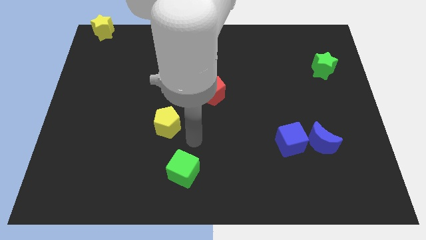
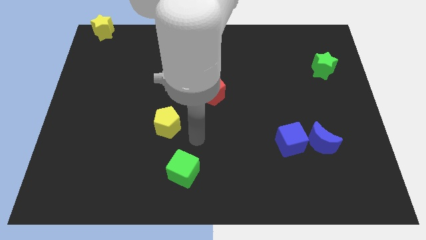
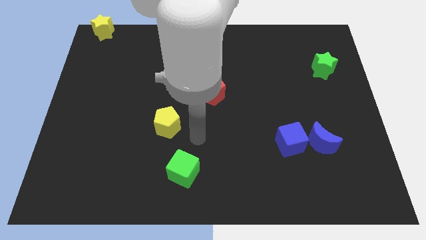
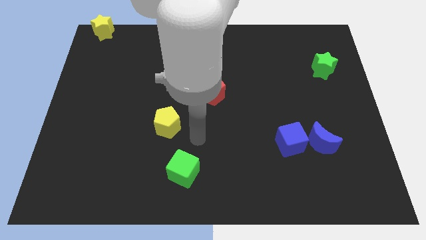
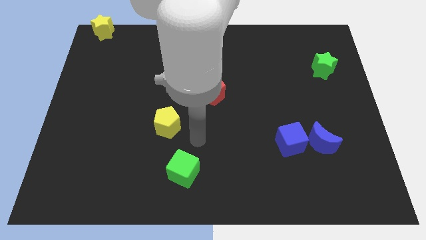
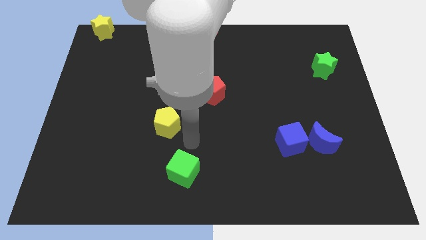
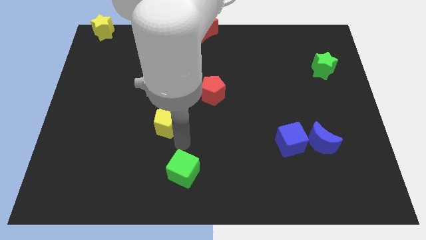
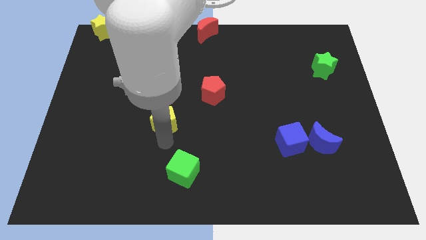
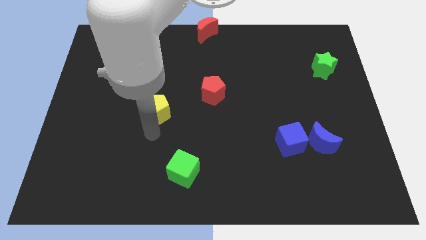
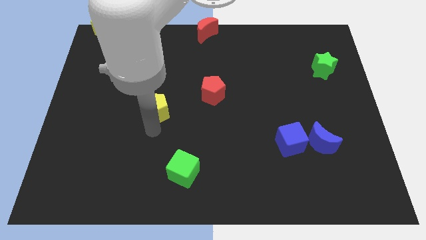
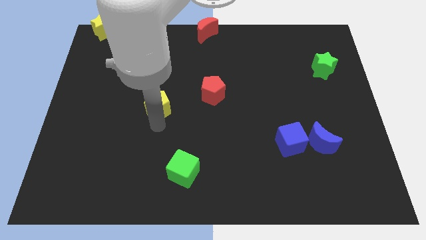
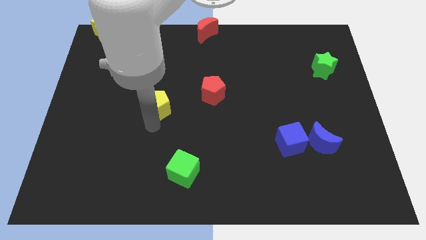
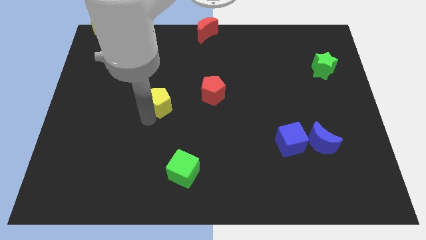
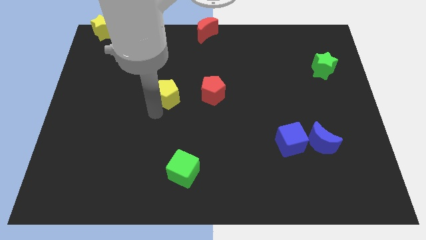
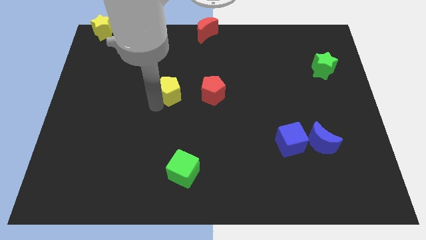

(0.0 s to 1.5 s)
move the yellow pentagon to the left of red pentagon

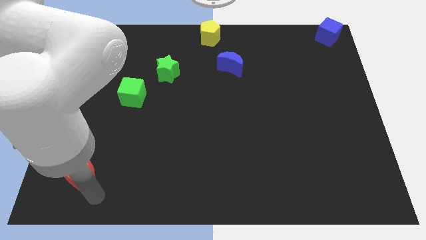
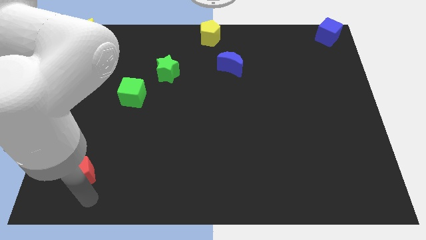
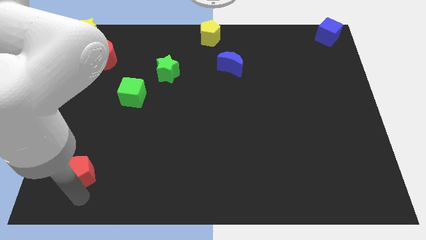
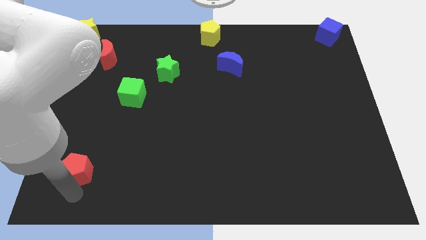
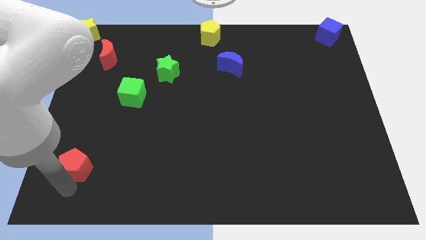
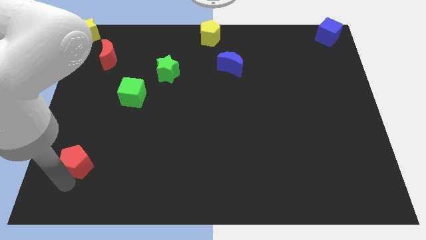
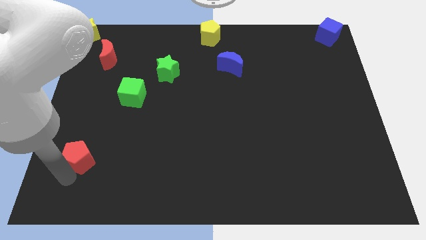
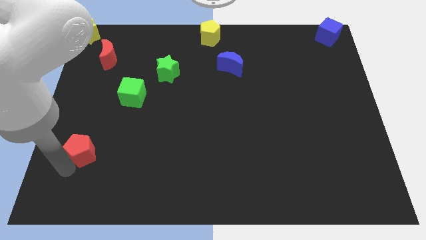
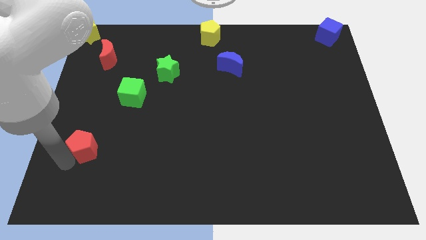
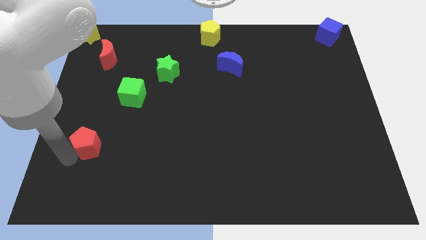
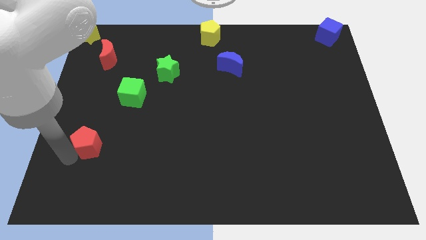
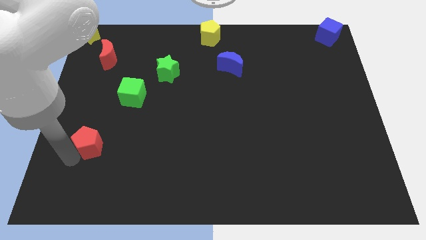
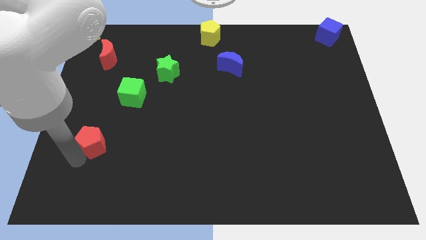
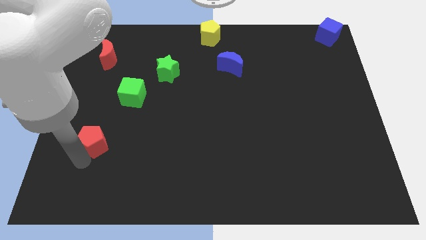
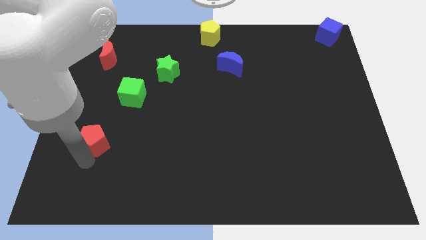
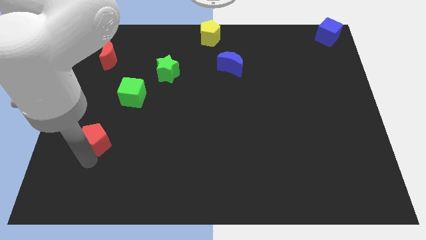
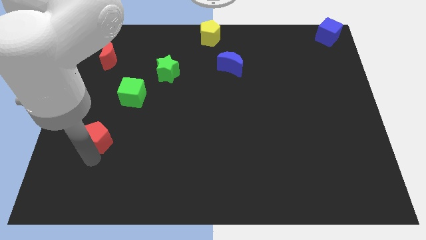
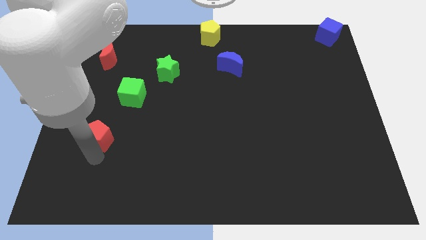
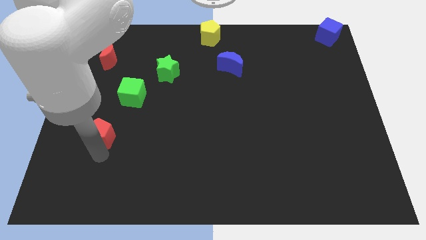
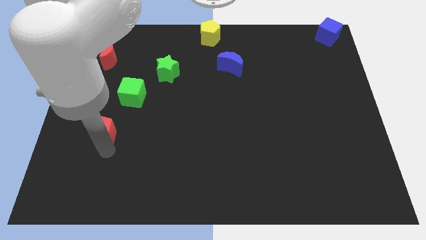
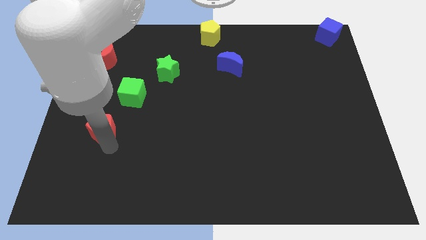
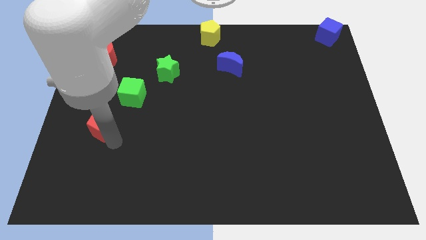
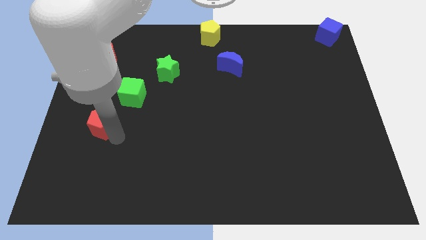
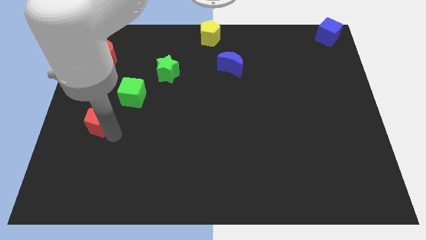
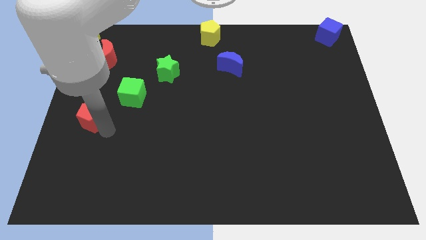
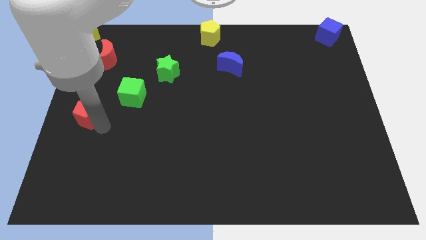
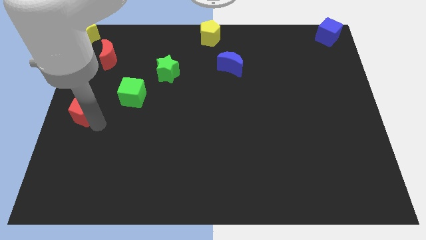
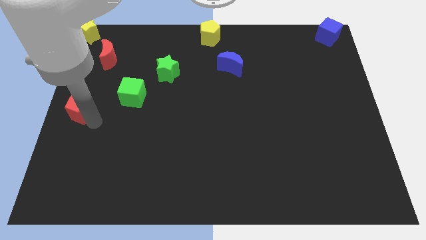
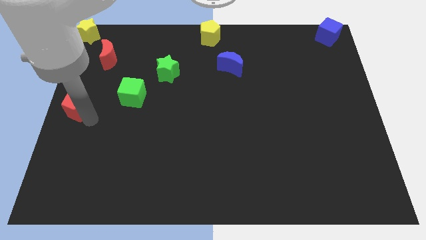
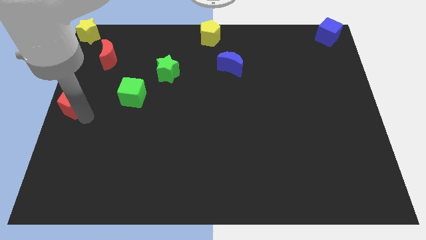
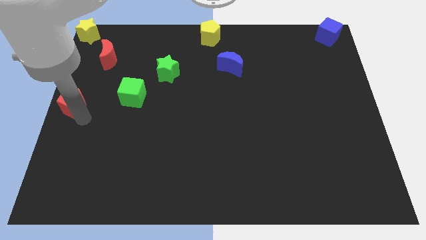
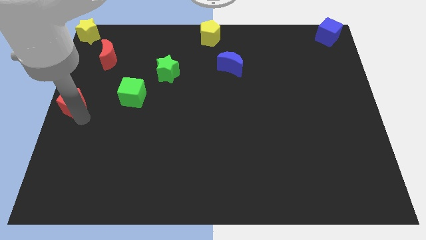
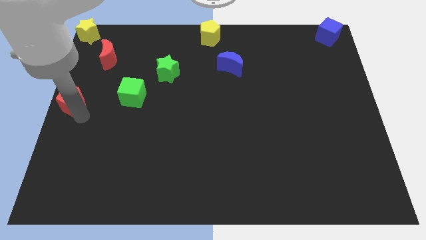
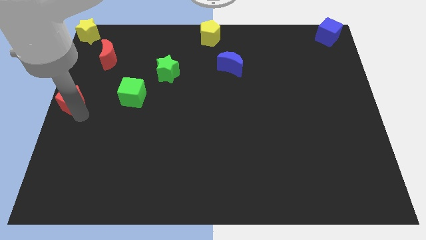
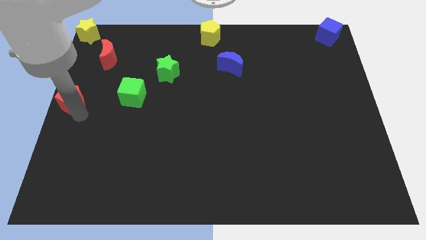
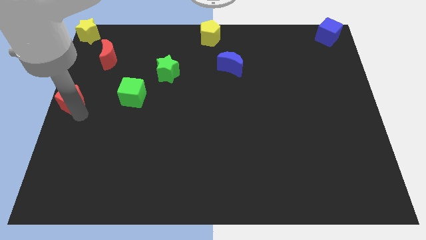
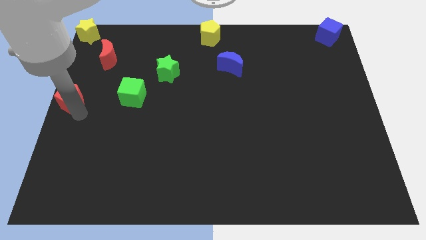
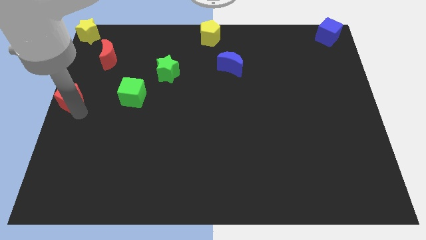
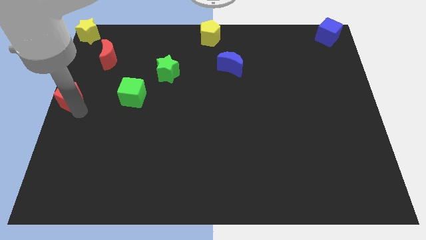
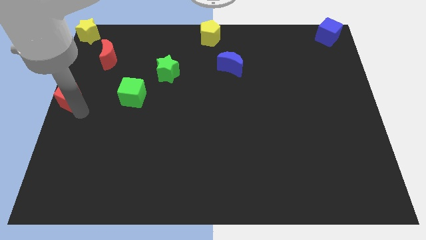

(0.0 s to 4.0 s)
move the red pentagon to the left center of the board

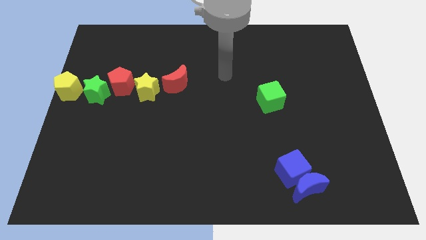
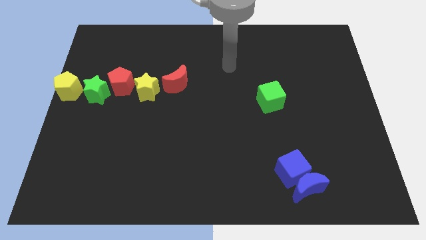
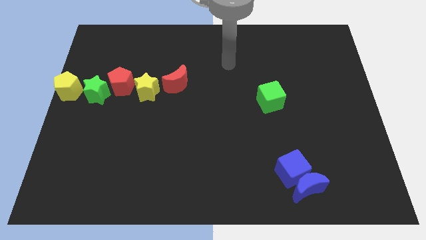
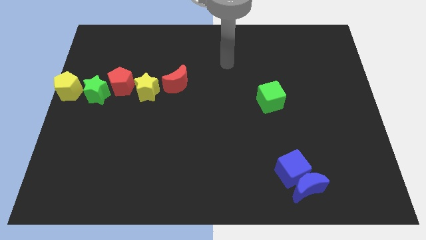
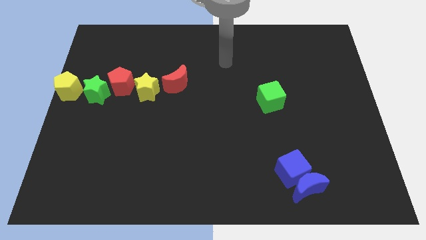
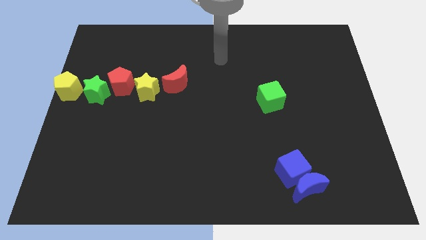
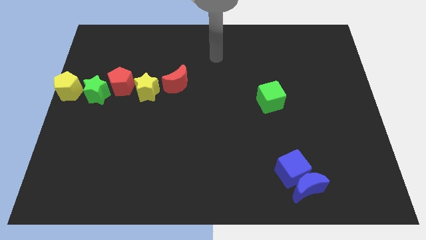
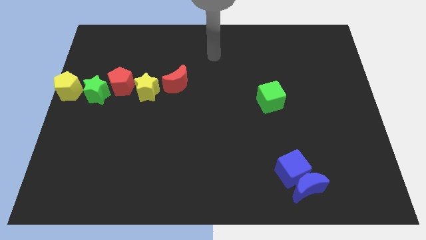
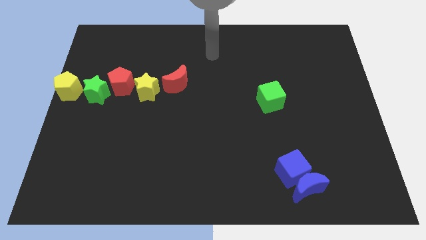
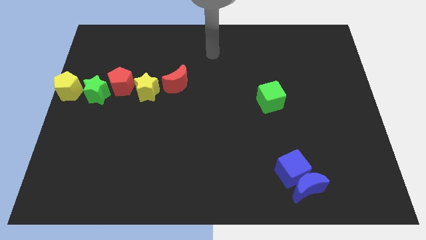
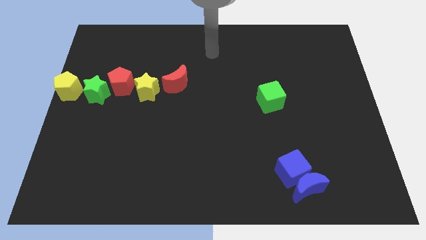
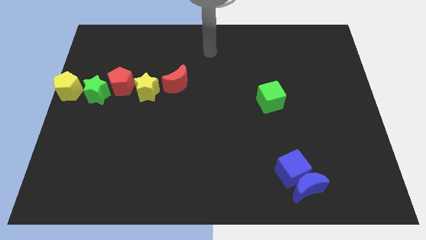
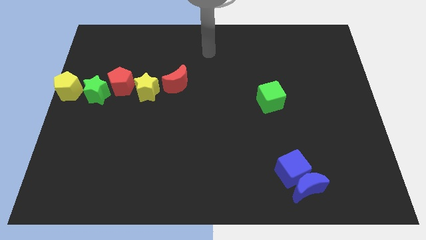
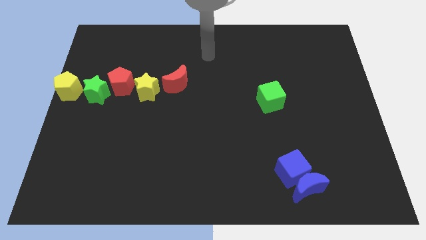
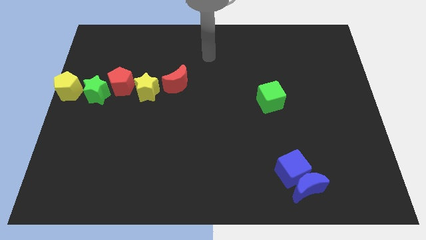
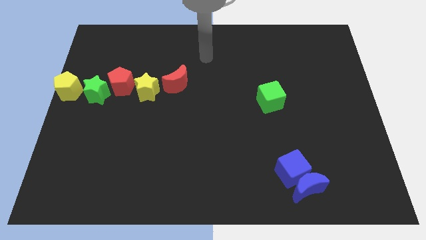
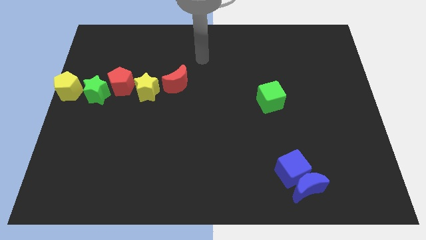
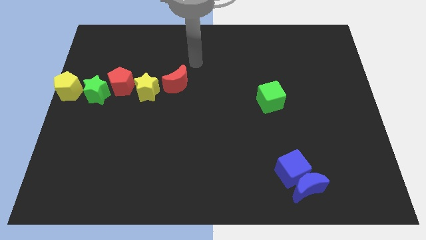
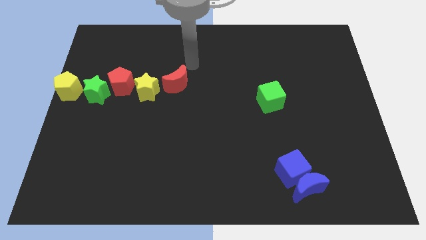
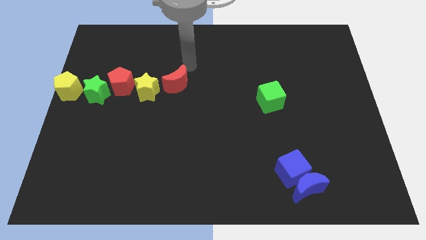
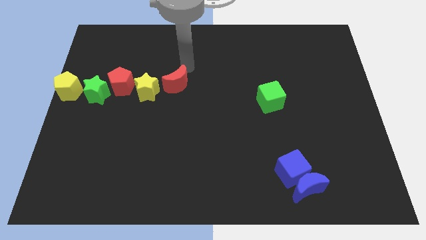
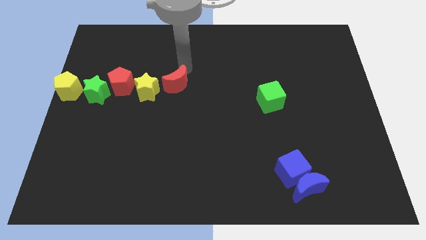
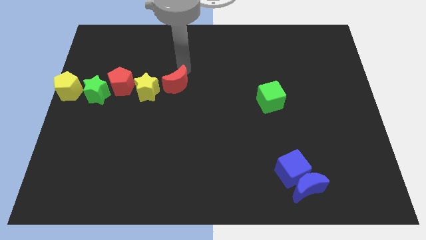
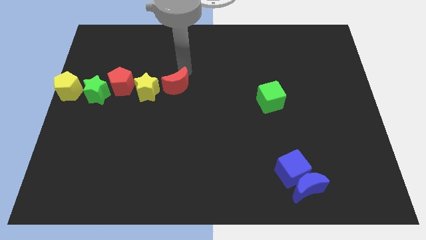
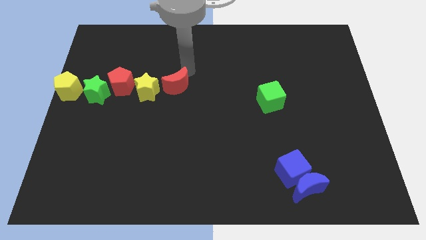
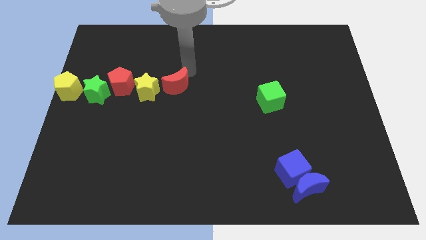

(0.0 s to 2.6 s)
move your arm above the red crescent

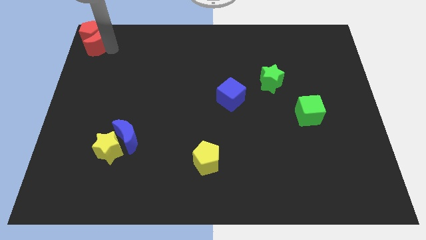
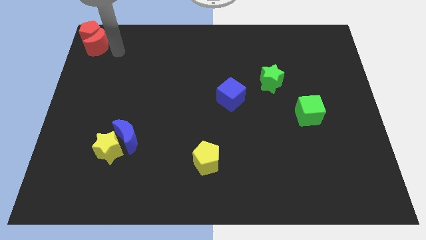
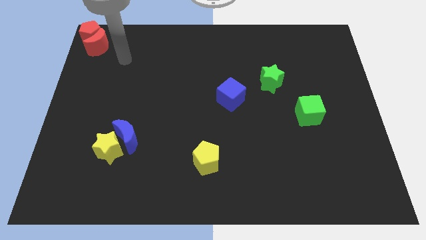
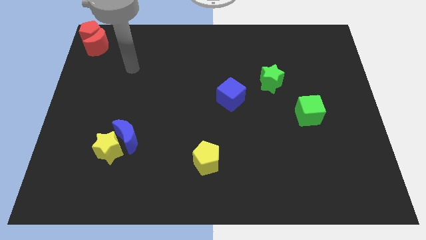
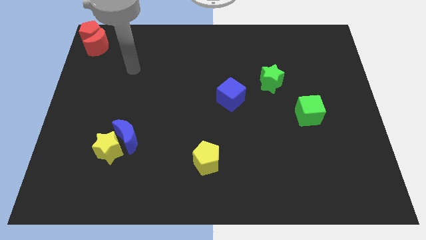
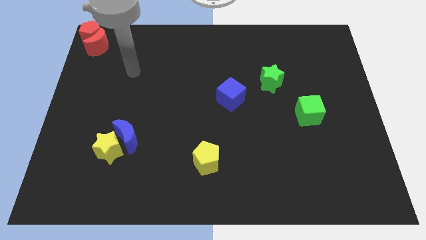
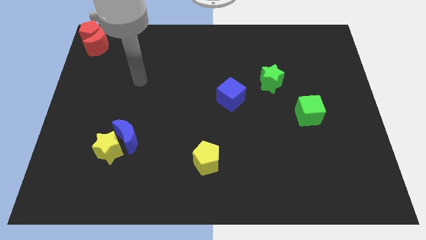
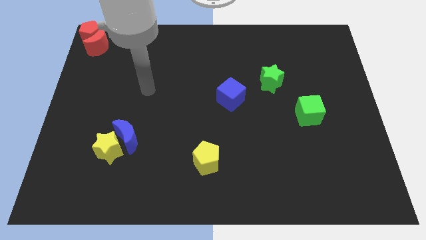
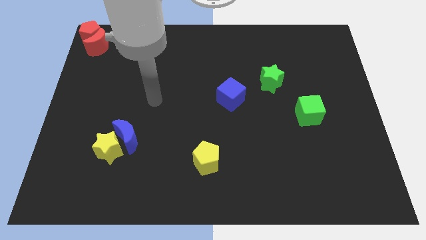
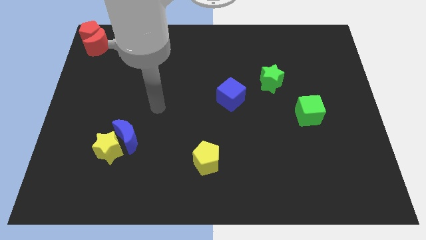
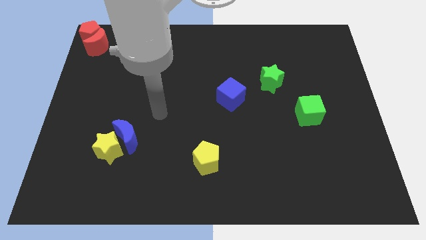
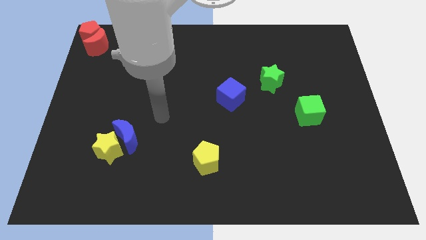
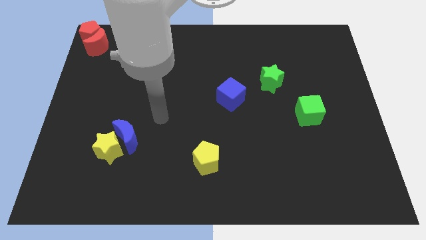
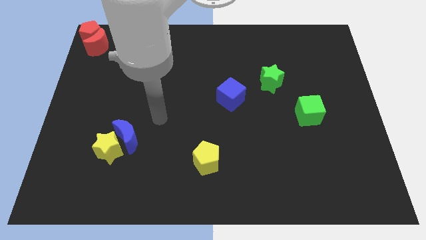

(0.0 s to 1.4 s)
move away from the red moon
